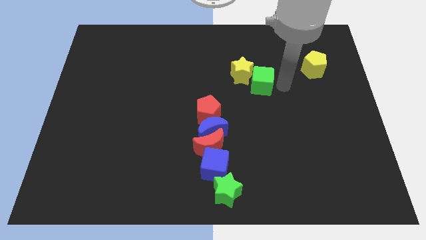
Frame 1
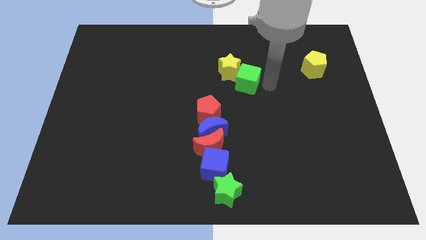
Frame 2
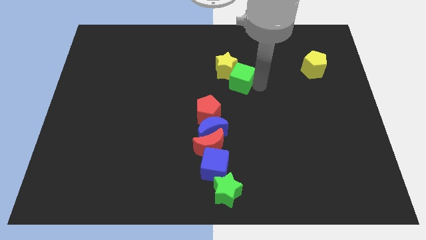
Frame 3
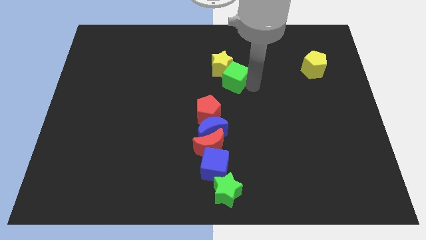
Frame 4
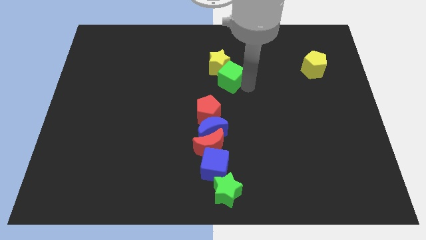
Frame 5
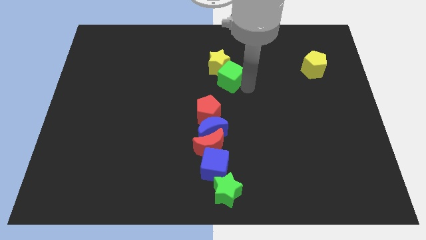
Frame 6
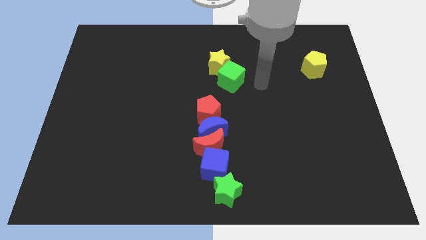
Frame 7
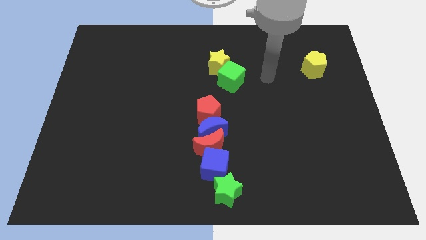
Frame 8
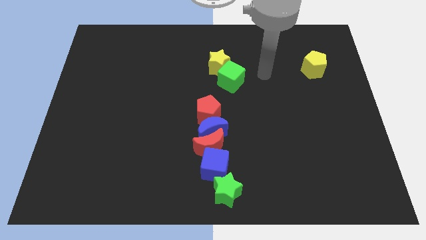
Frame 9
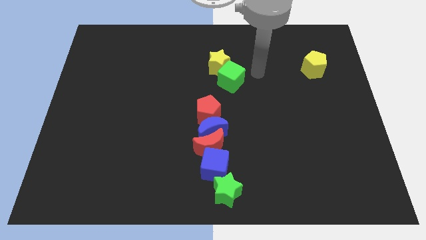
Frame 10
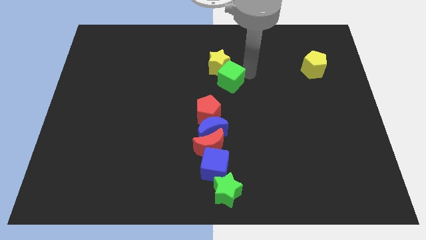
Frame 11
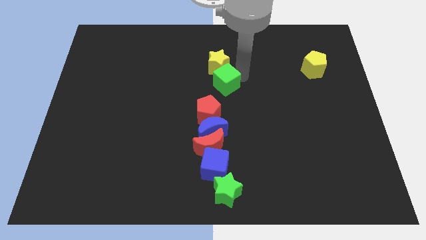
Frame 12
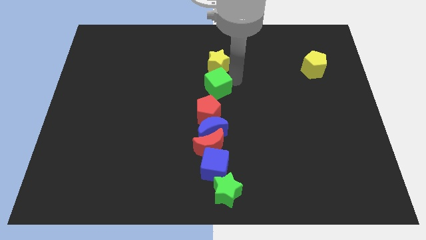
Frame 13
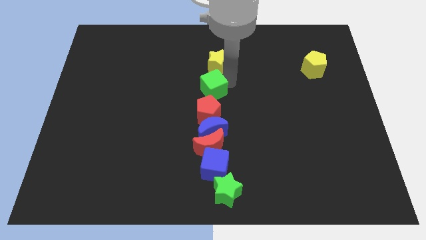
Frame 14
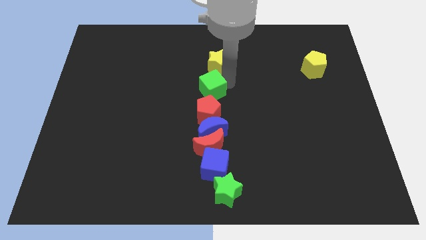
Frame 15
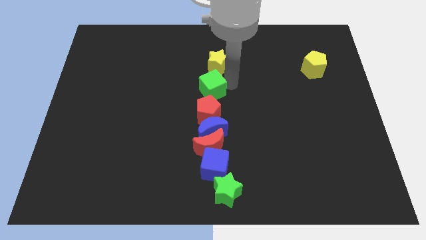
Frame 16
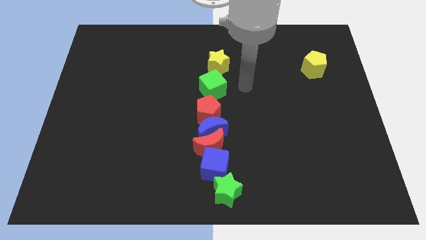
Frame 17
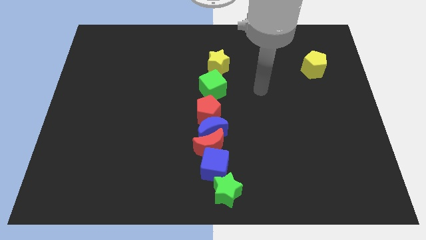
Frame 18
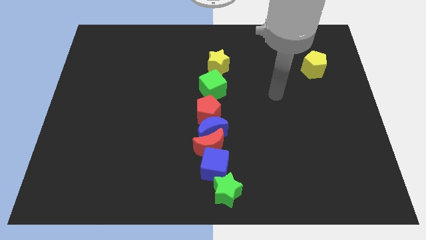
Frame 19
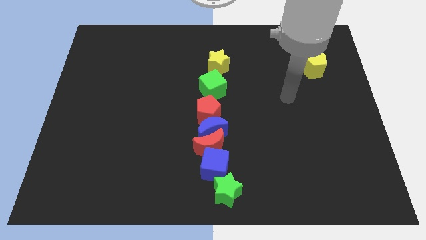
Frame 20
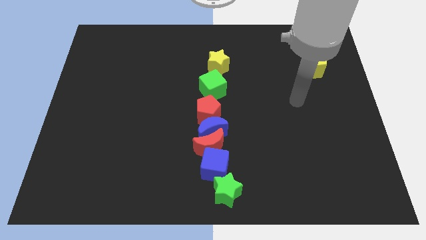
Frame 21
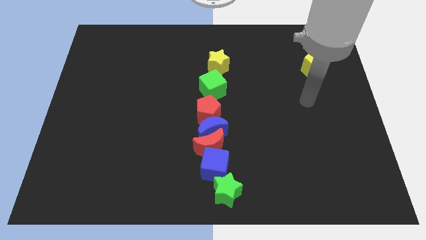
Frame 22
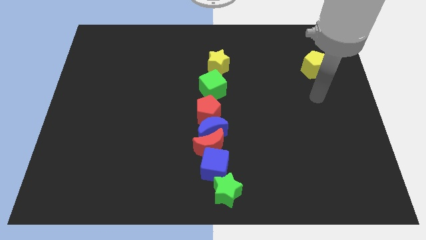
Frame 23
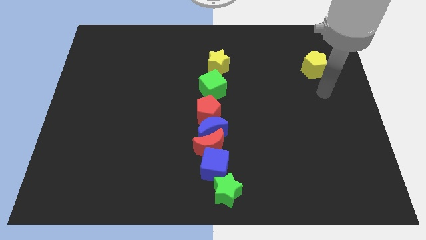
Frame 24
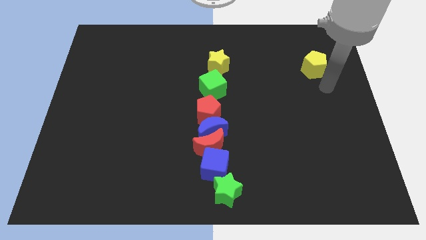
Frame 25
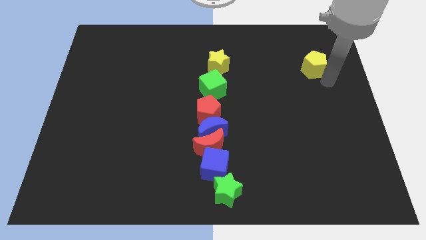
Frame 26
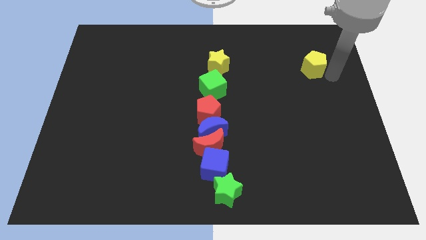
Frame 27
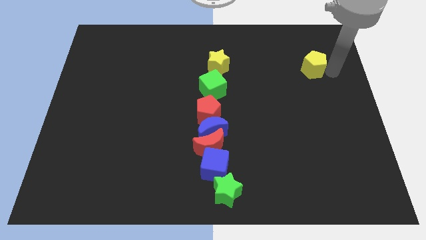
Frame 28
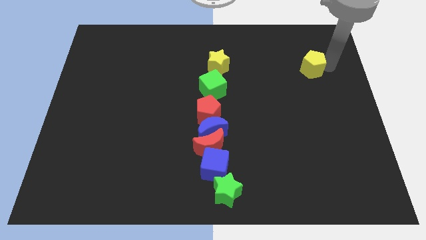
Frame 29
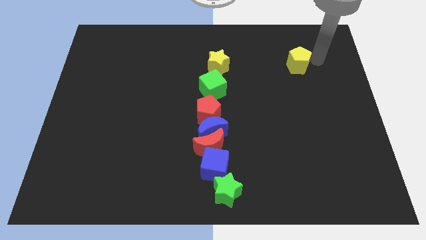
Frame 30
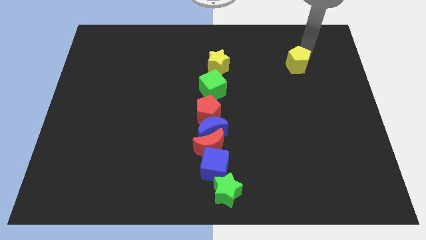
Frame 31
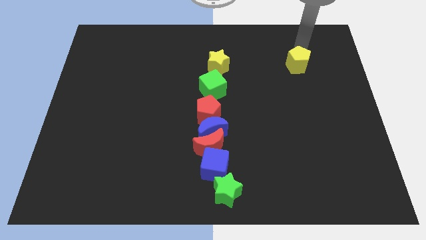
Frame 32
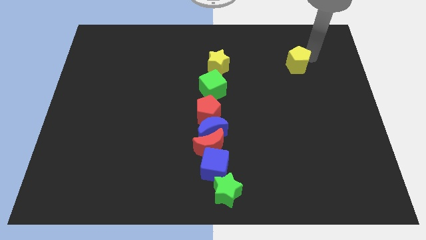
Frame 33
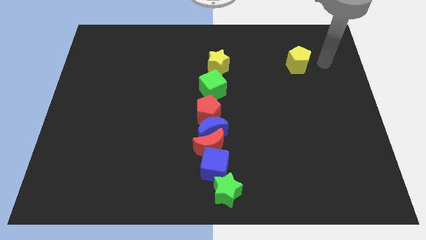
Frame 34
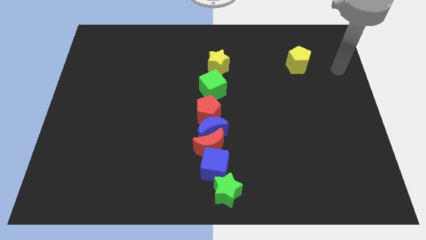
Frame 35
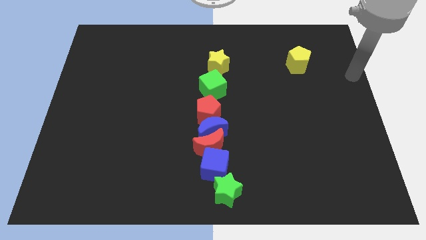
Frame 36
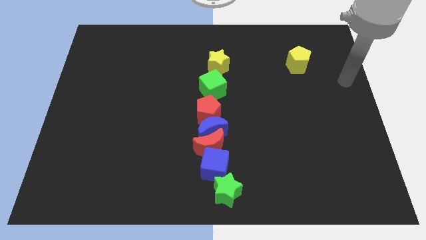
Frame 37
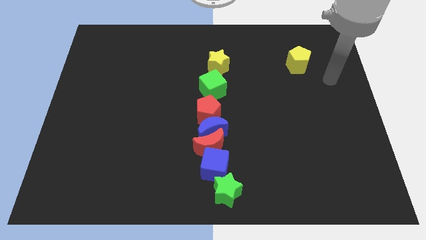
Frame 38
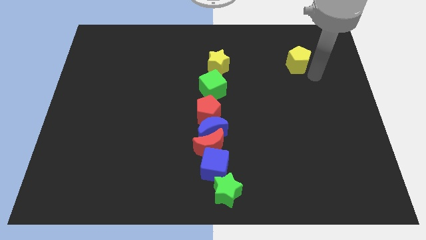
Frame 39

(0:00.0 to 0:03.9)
move the green cube and yellow star on the top of the red pentagon

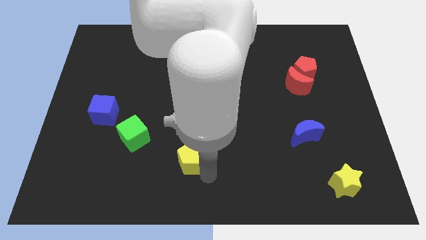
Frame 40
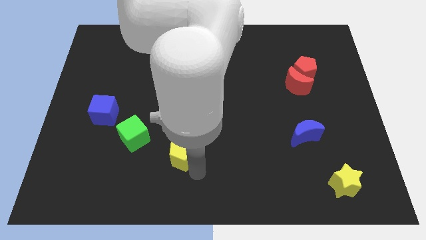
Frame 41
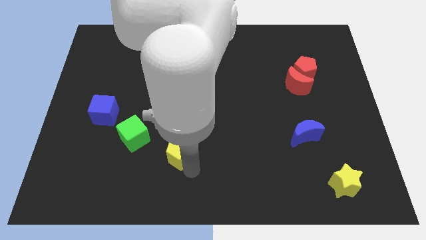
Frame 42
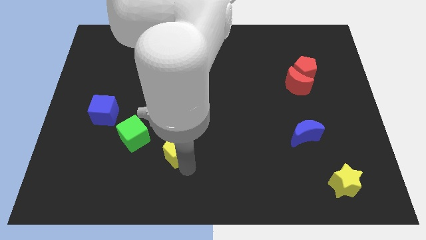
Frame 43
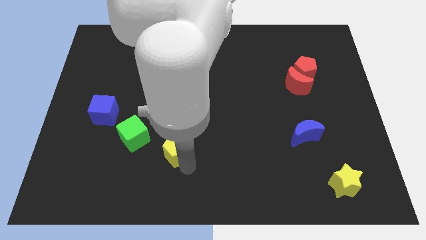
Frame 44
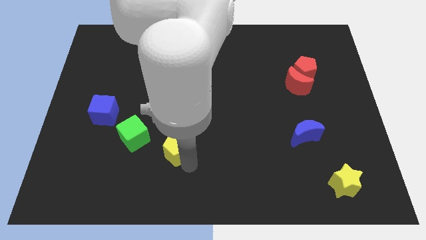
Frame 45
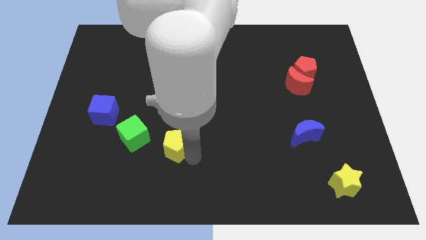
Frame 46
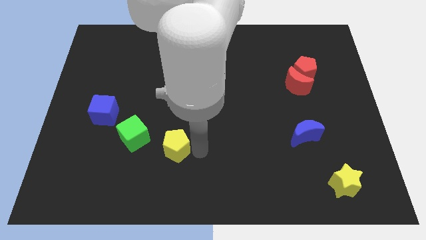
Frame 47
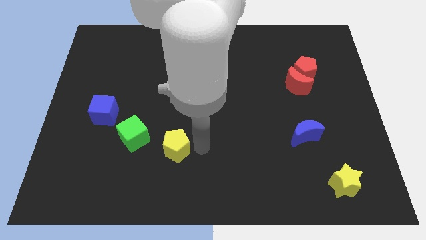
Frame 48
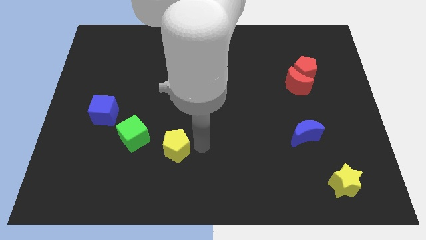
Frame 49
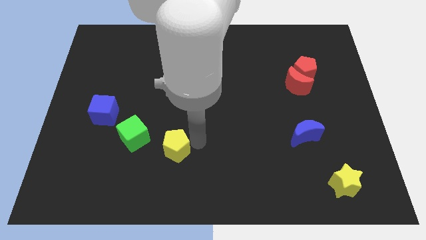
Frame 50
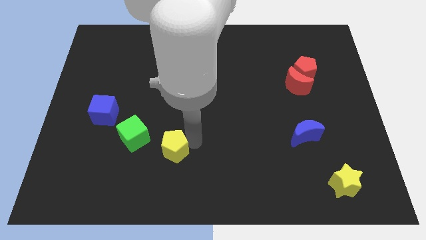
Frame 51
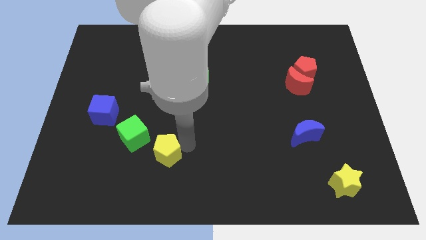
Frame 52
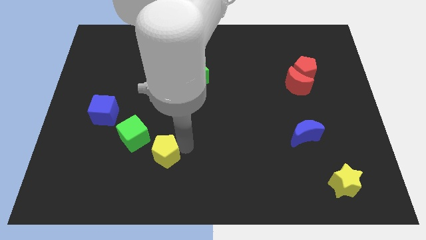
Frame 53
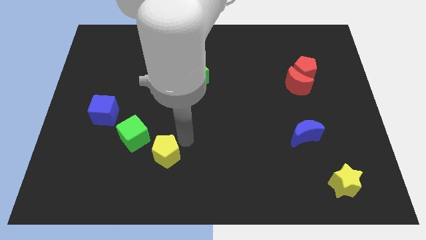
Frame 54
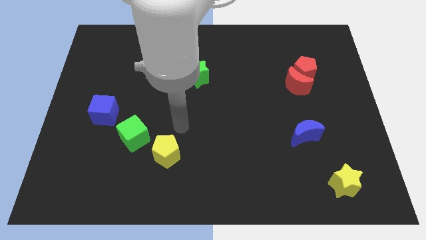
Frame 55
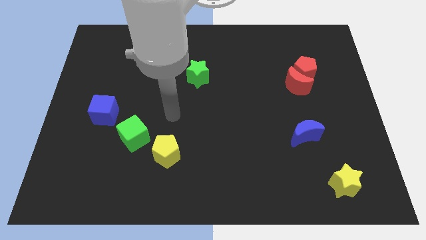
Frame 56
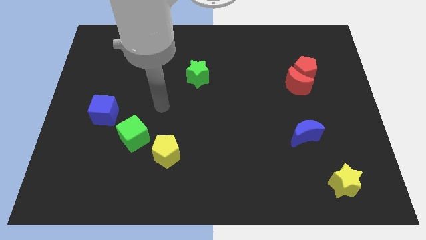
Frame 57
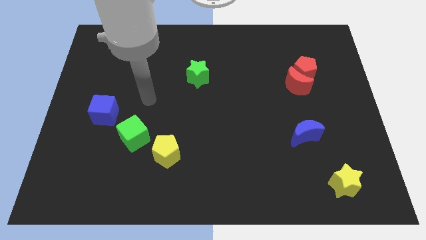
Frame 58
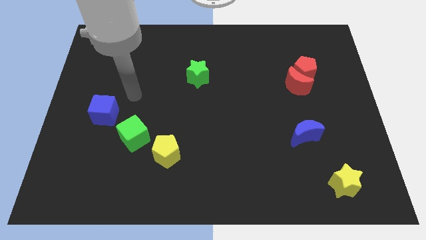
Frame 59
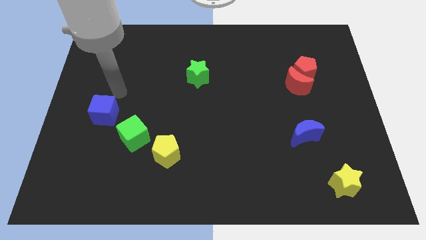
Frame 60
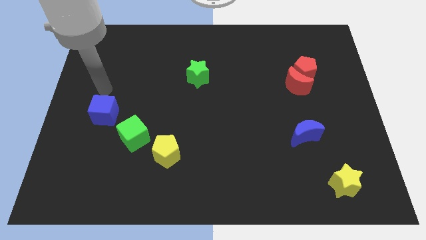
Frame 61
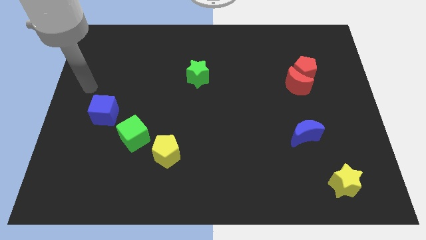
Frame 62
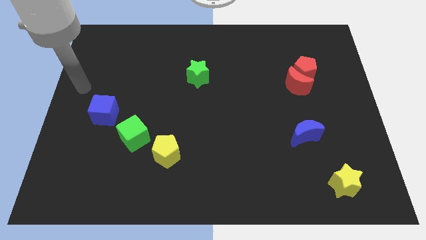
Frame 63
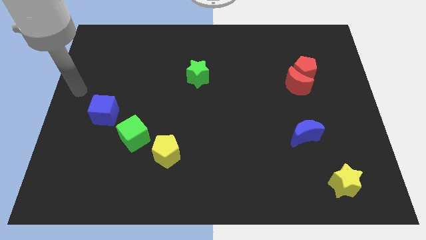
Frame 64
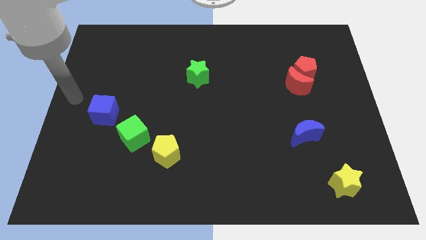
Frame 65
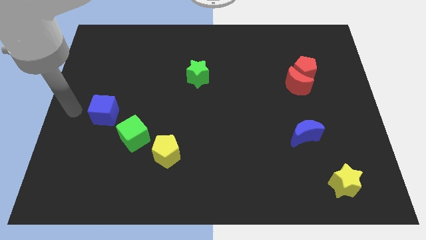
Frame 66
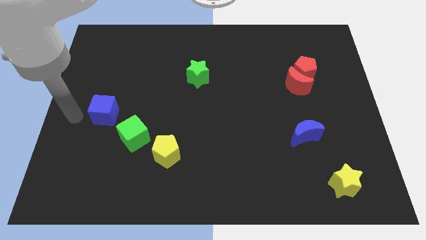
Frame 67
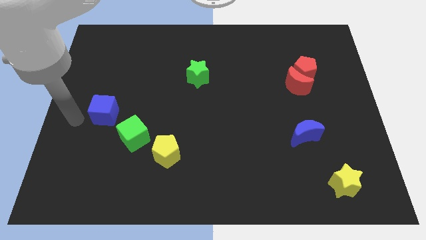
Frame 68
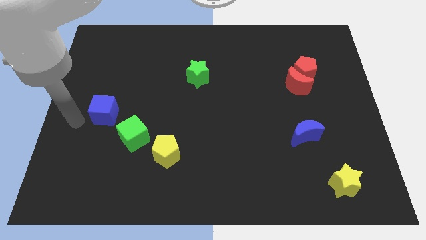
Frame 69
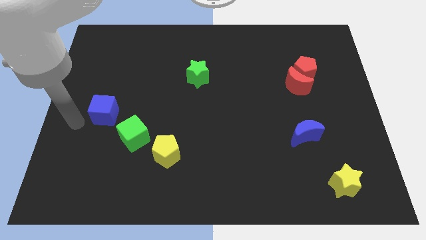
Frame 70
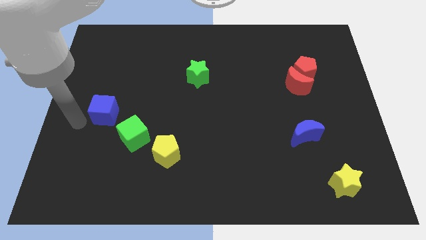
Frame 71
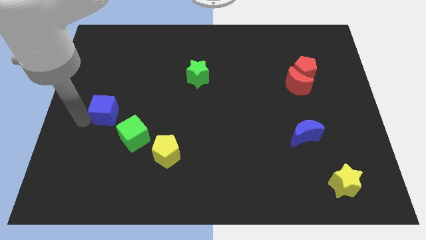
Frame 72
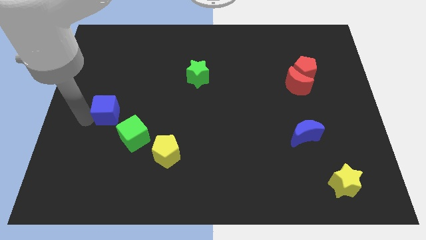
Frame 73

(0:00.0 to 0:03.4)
move the yellow pentagon to the bottom right side of the green cube

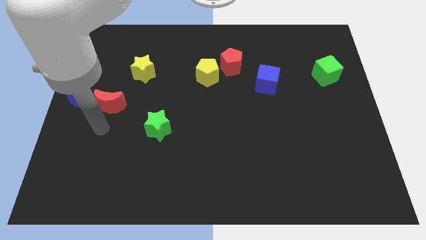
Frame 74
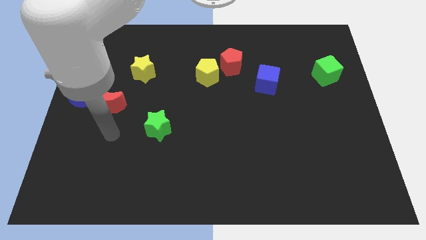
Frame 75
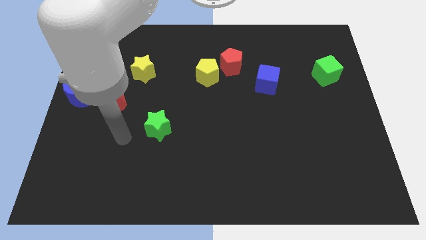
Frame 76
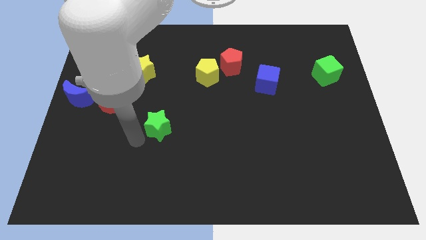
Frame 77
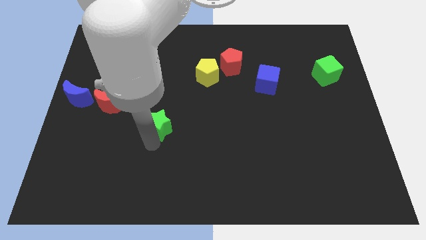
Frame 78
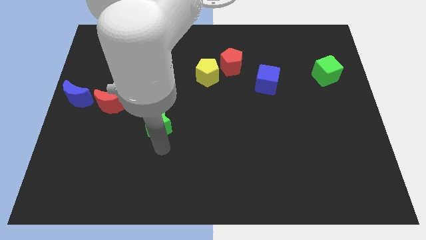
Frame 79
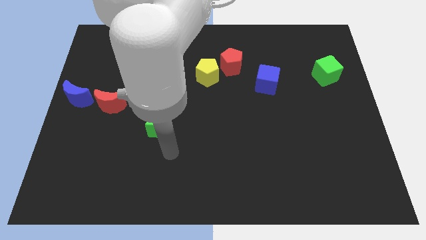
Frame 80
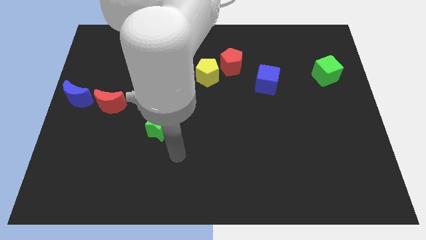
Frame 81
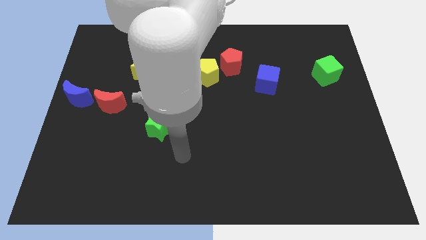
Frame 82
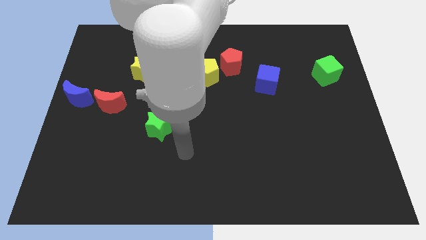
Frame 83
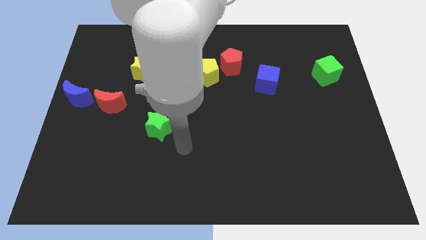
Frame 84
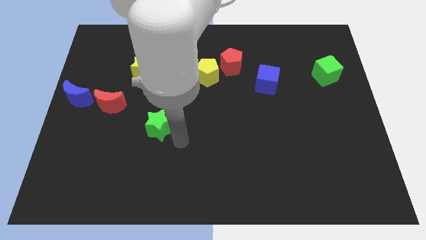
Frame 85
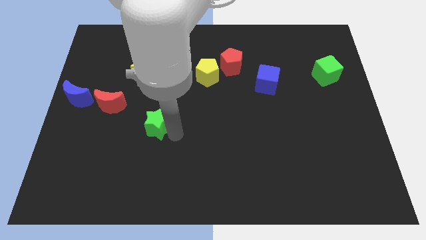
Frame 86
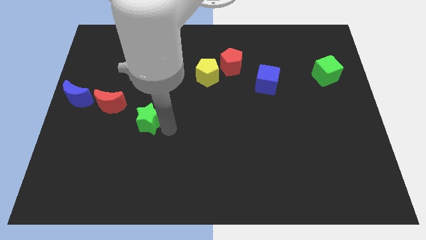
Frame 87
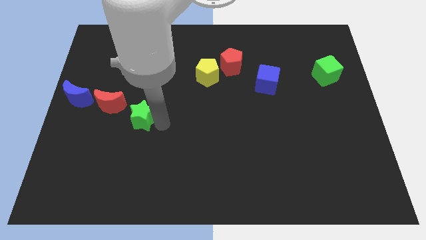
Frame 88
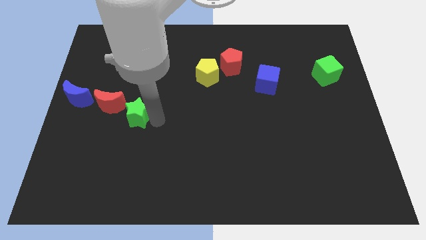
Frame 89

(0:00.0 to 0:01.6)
move the green star to the right of the red moon
